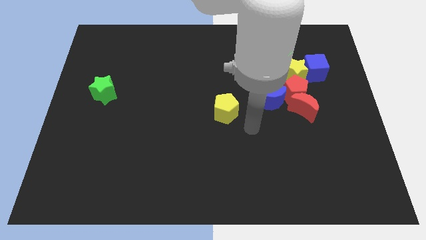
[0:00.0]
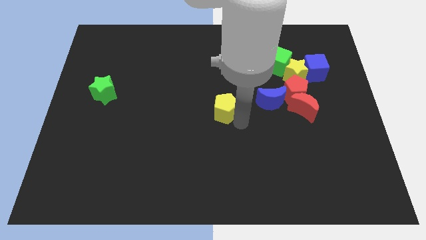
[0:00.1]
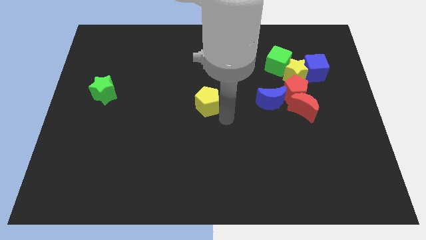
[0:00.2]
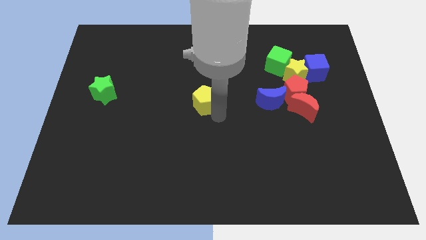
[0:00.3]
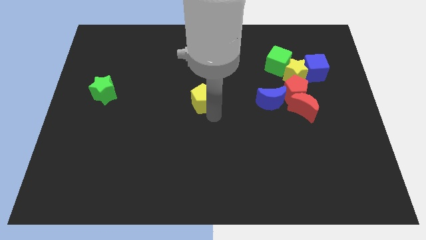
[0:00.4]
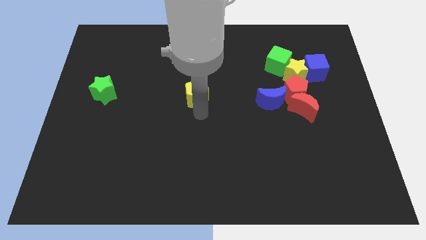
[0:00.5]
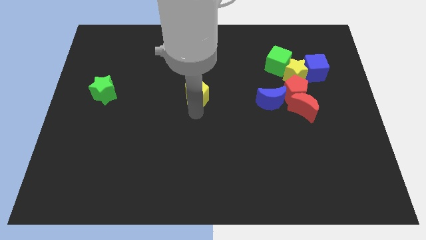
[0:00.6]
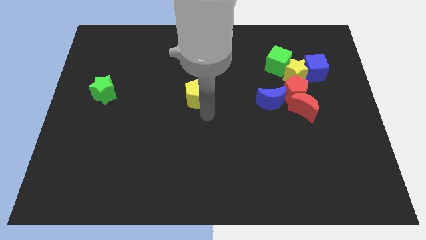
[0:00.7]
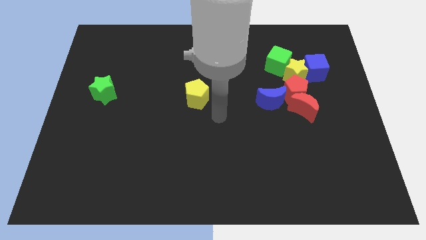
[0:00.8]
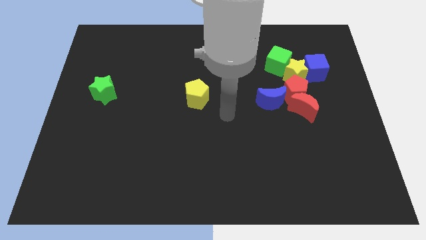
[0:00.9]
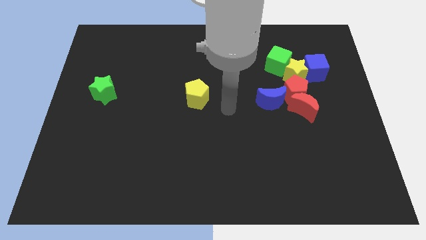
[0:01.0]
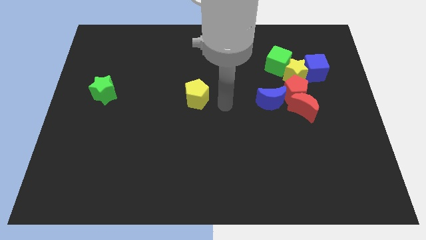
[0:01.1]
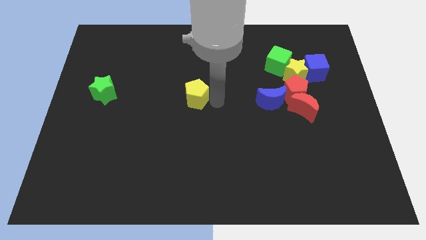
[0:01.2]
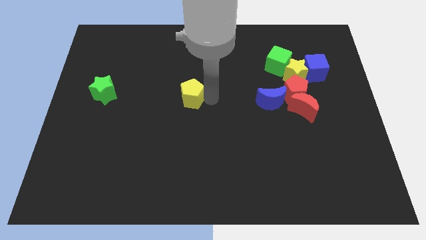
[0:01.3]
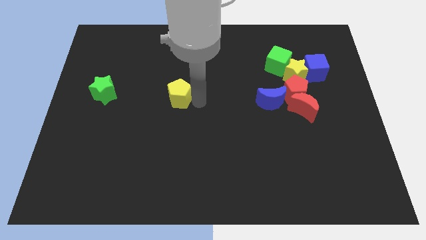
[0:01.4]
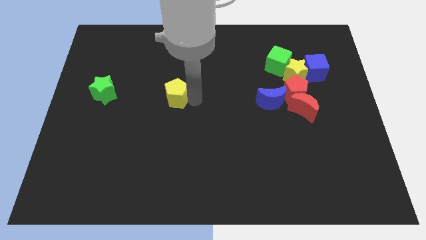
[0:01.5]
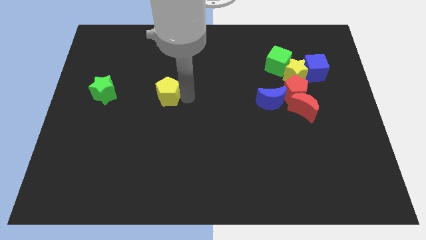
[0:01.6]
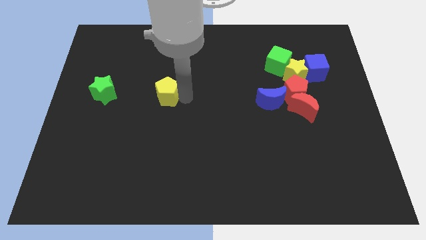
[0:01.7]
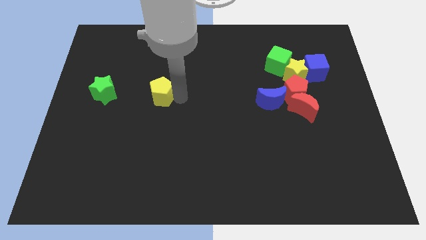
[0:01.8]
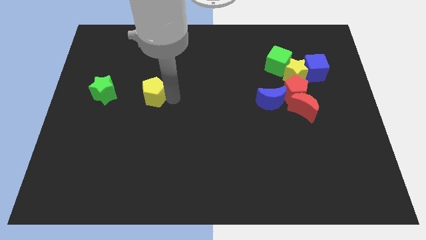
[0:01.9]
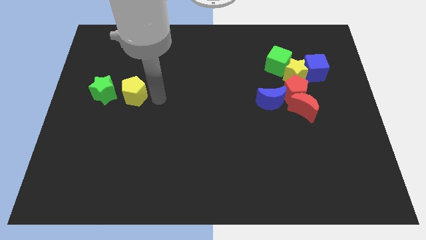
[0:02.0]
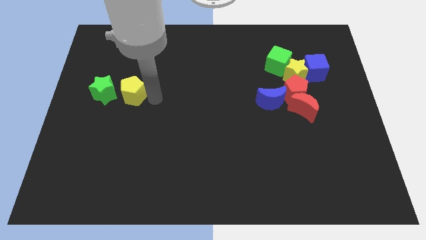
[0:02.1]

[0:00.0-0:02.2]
drag the yellow pentagon towards the green star

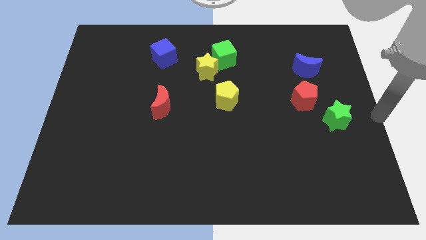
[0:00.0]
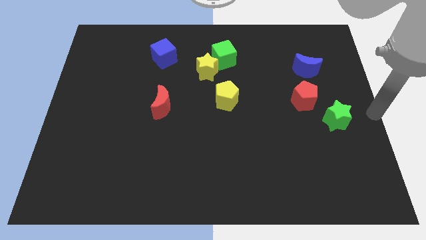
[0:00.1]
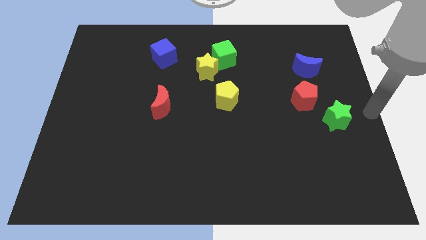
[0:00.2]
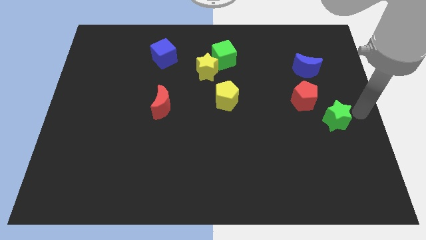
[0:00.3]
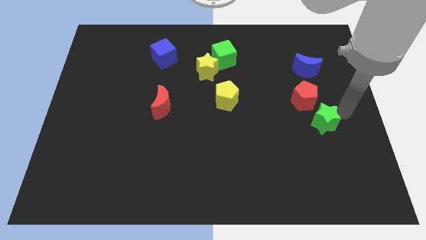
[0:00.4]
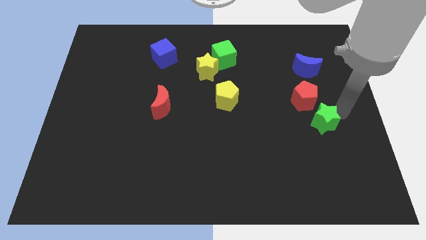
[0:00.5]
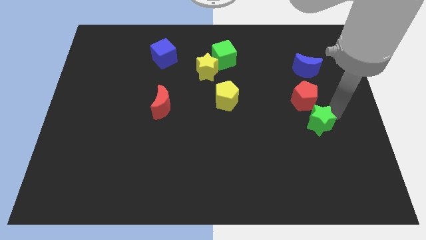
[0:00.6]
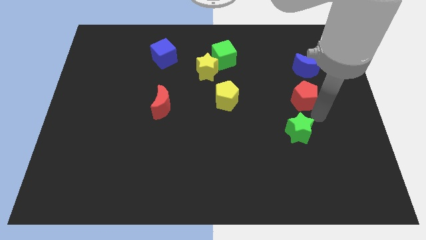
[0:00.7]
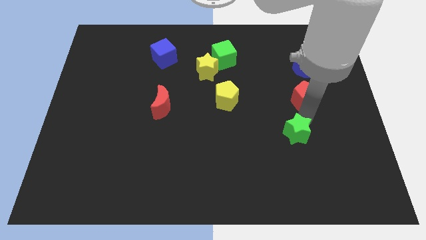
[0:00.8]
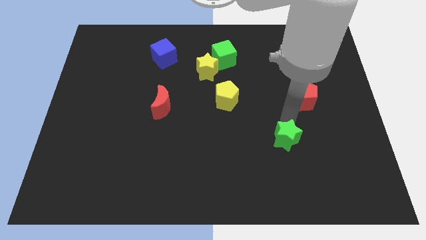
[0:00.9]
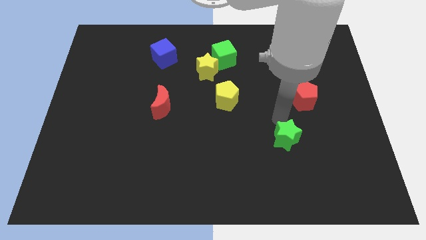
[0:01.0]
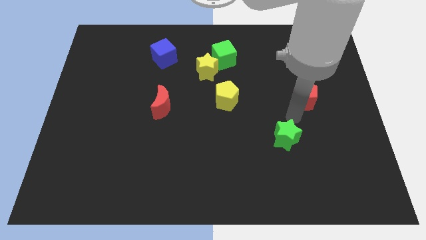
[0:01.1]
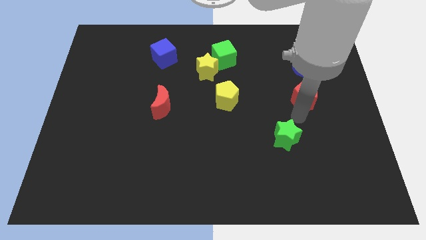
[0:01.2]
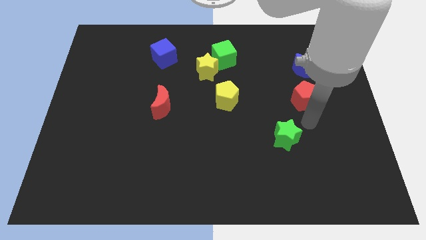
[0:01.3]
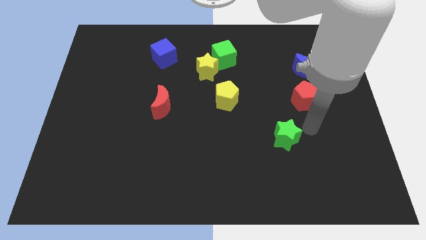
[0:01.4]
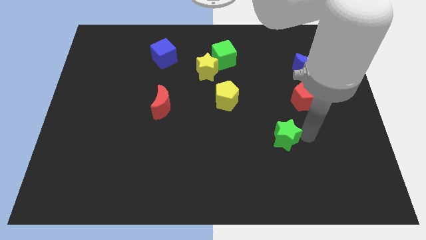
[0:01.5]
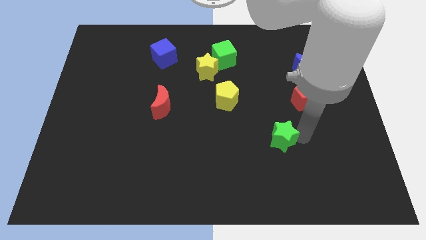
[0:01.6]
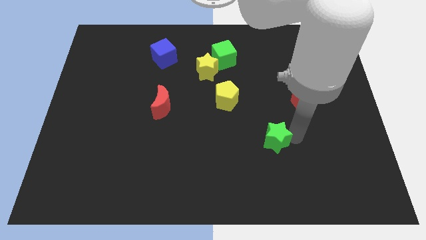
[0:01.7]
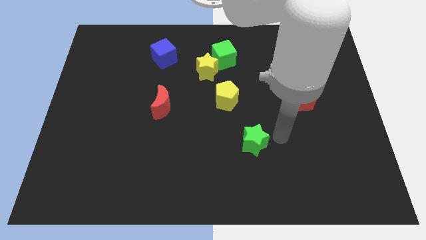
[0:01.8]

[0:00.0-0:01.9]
slide the green star away from the red pentagon

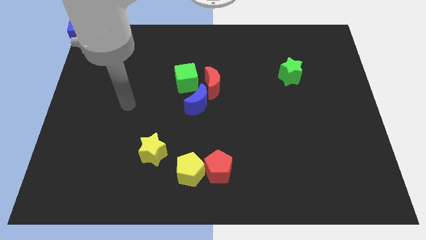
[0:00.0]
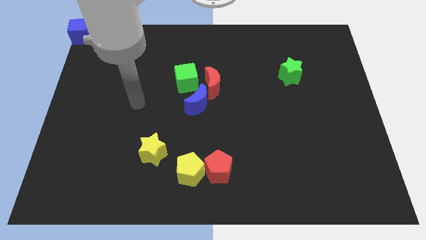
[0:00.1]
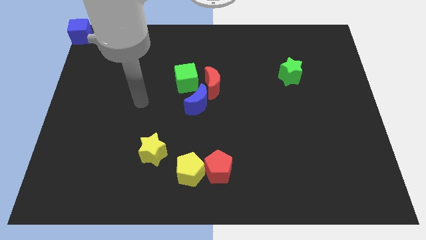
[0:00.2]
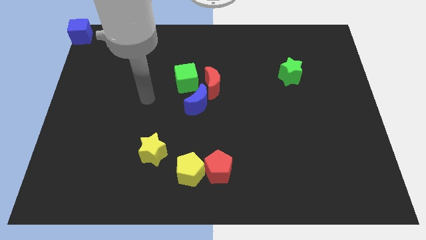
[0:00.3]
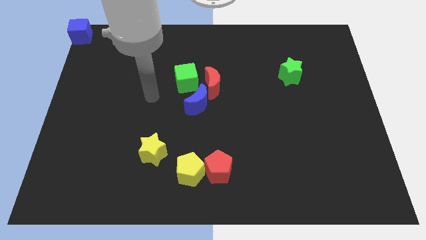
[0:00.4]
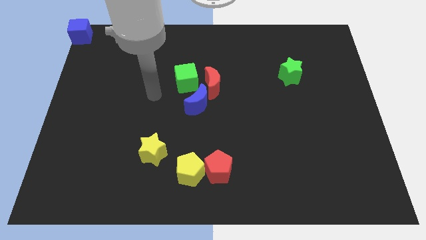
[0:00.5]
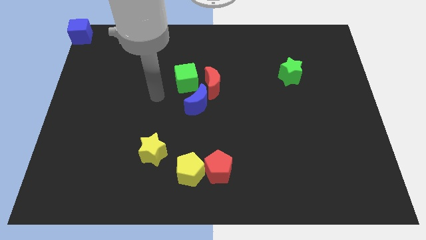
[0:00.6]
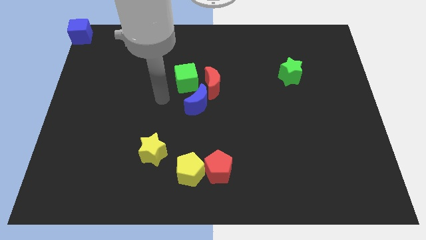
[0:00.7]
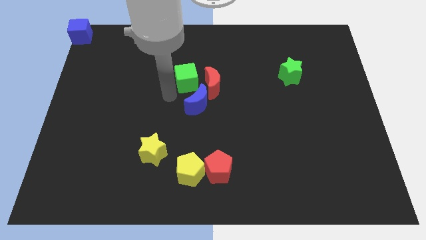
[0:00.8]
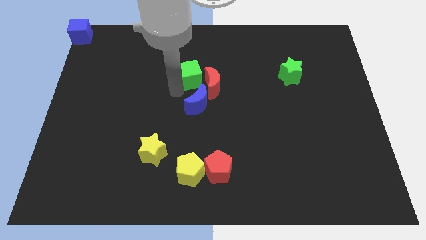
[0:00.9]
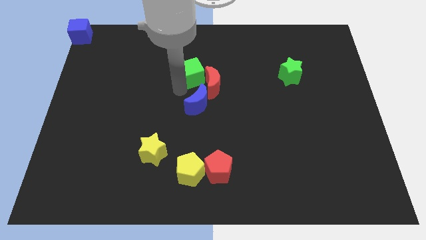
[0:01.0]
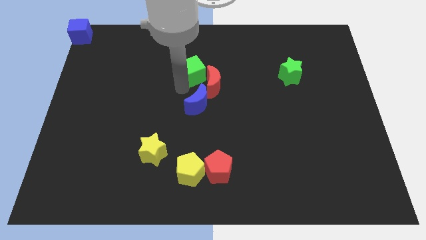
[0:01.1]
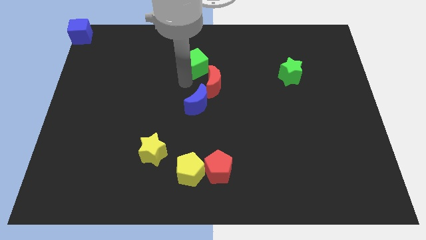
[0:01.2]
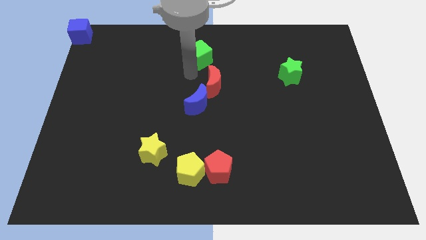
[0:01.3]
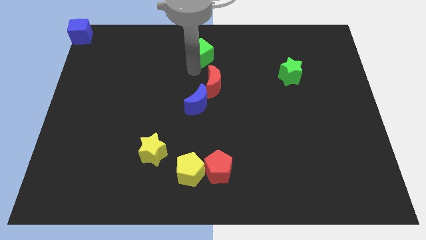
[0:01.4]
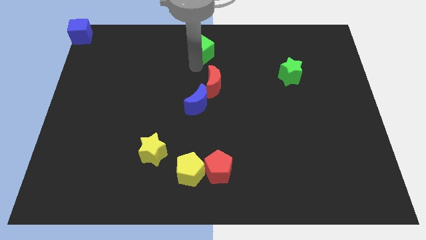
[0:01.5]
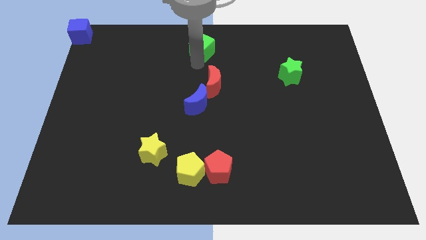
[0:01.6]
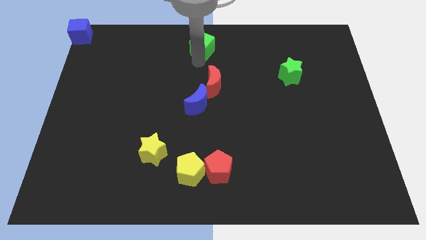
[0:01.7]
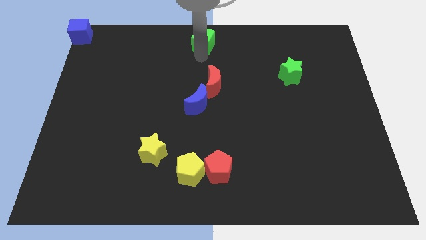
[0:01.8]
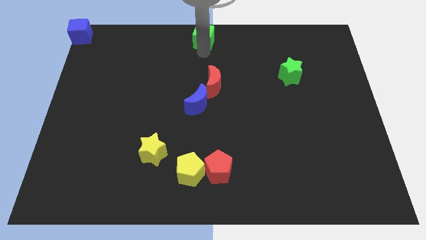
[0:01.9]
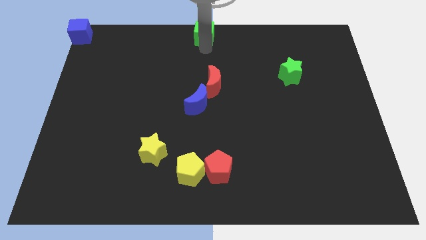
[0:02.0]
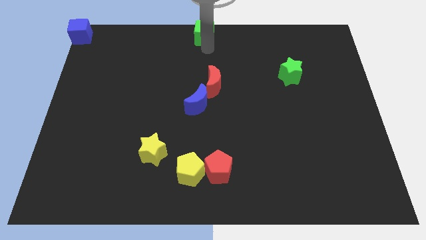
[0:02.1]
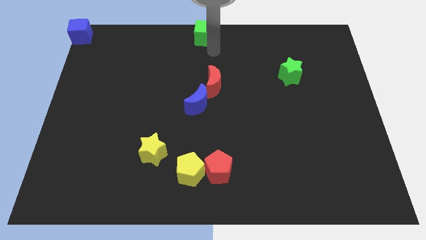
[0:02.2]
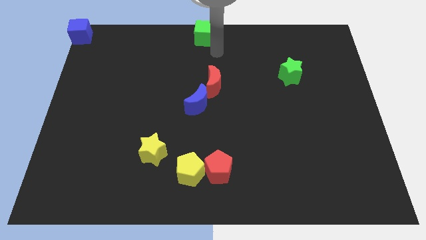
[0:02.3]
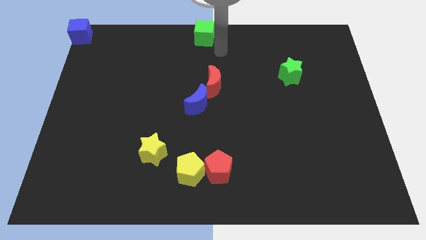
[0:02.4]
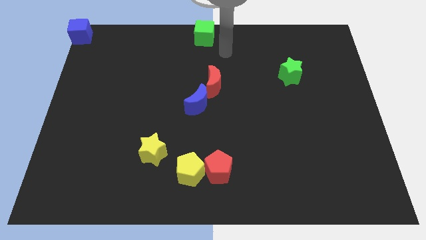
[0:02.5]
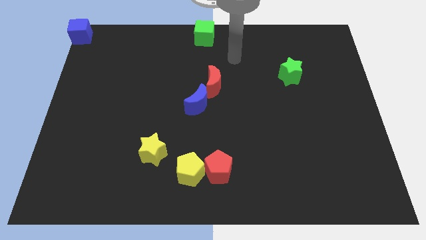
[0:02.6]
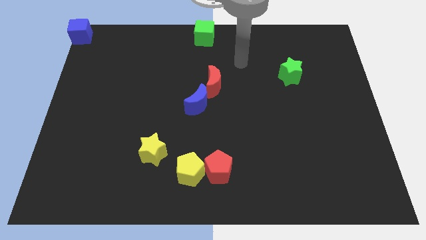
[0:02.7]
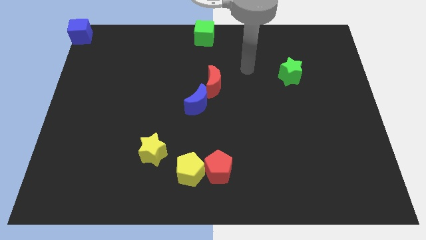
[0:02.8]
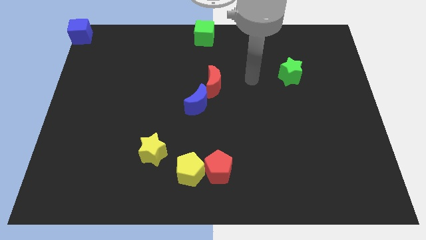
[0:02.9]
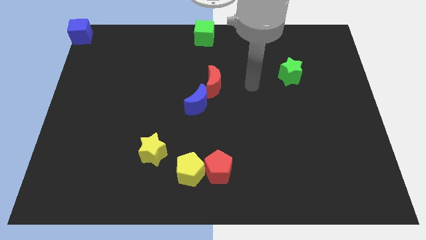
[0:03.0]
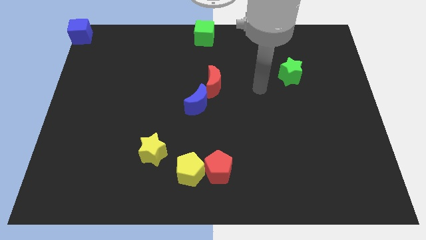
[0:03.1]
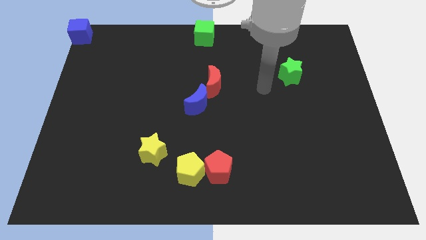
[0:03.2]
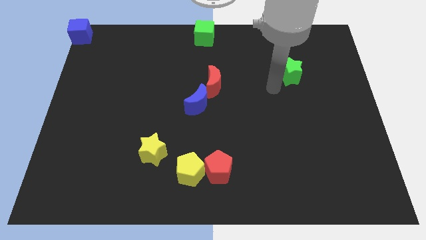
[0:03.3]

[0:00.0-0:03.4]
push green cube to the top centre of the board

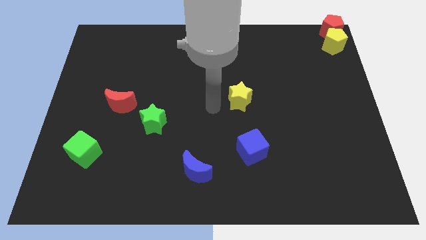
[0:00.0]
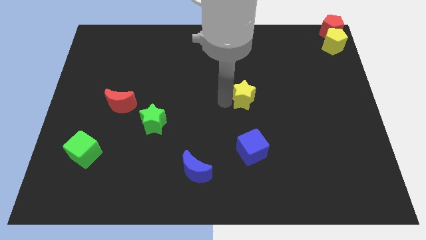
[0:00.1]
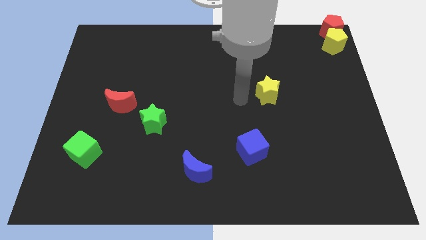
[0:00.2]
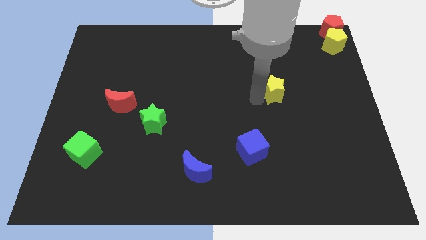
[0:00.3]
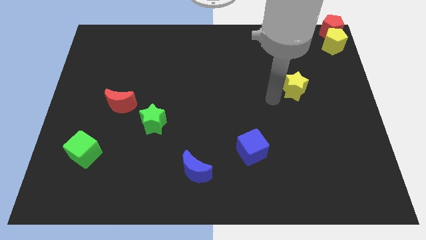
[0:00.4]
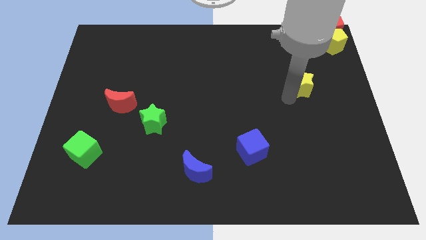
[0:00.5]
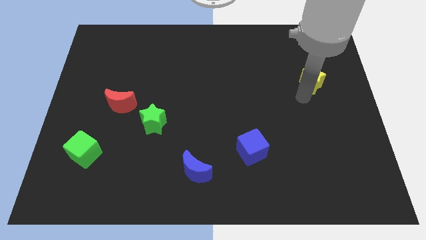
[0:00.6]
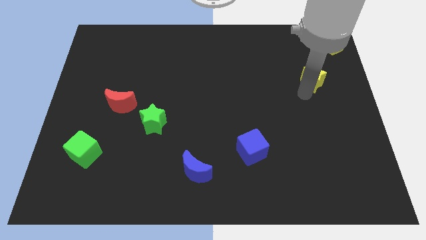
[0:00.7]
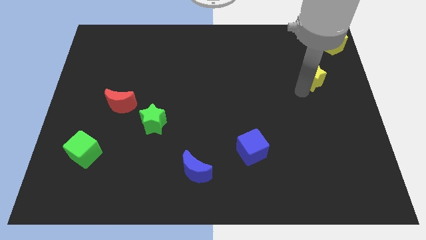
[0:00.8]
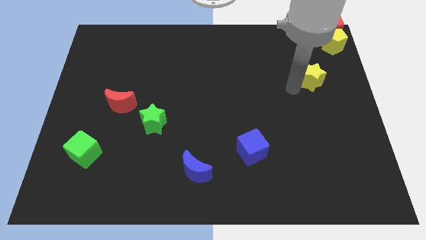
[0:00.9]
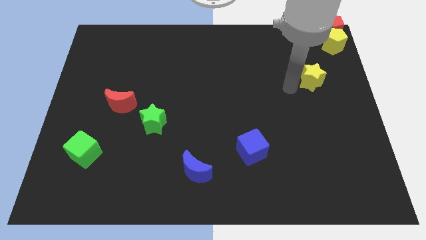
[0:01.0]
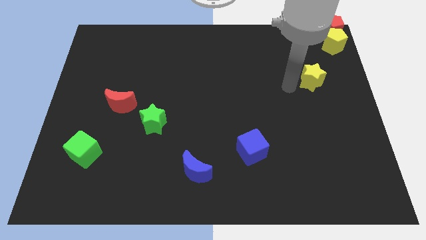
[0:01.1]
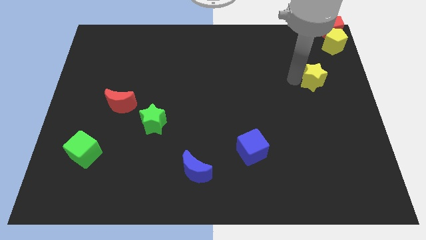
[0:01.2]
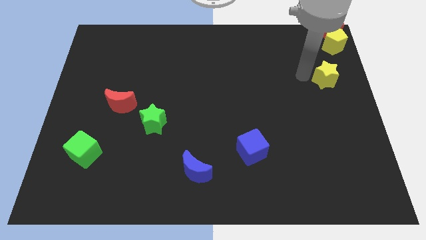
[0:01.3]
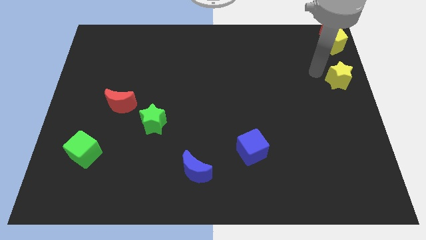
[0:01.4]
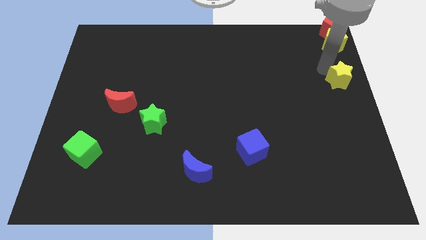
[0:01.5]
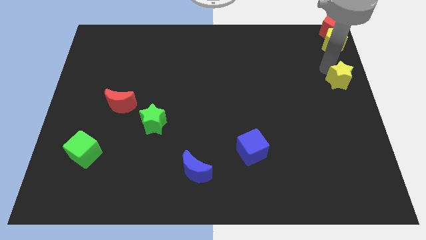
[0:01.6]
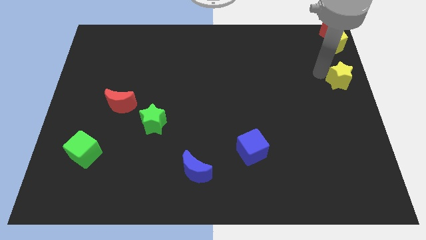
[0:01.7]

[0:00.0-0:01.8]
place the yellow star underneath the yellow pentagon
